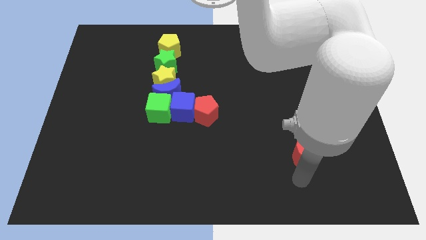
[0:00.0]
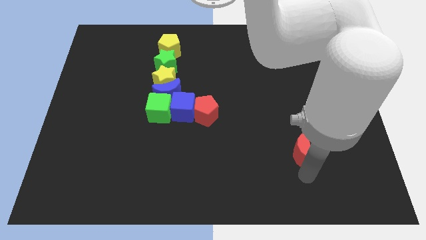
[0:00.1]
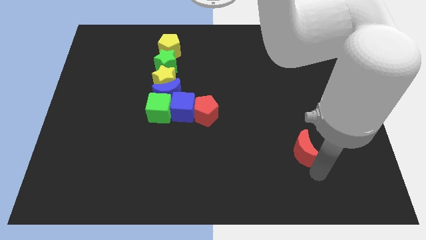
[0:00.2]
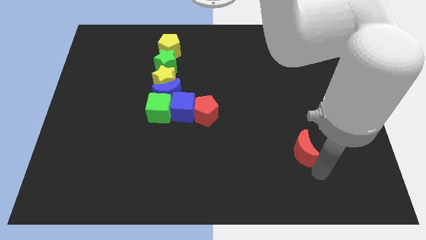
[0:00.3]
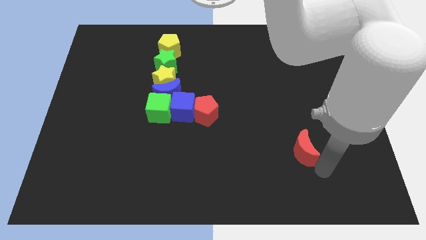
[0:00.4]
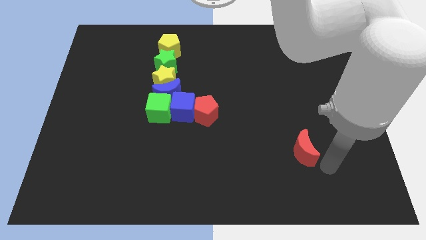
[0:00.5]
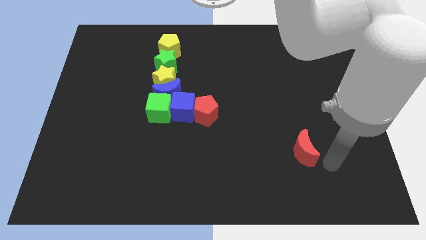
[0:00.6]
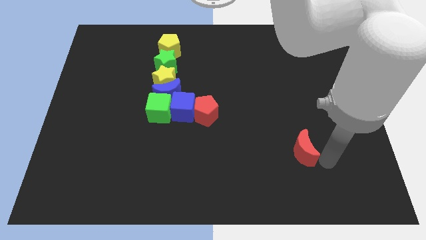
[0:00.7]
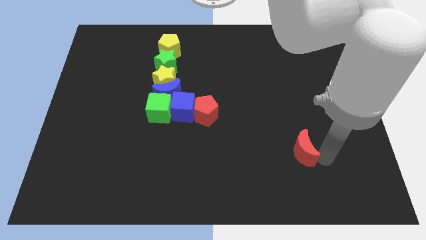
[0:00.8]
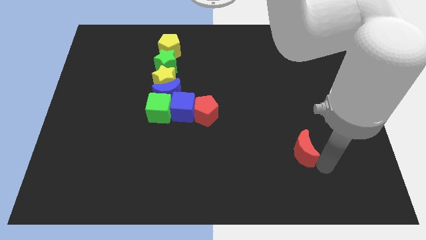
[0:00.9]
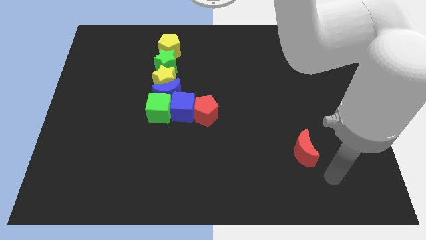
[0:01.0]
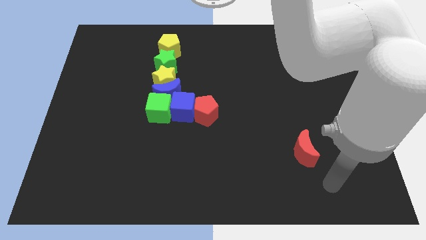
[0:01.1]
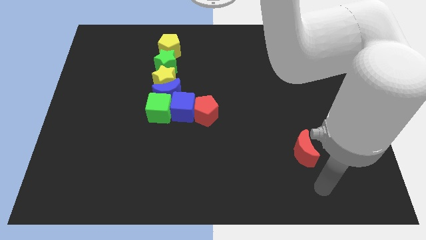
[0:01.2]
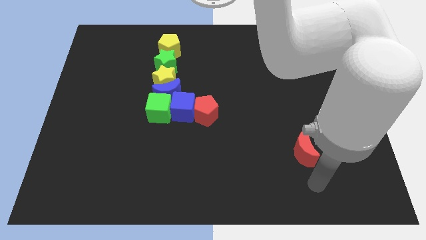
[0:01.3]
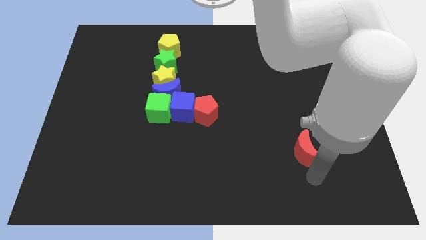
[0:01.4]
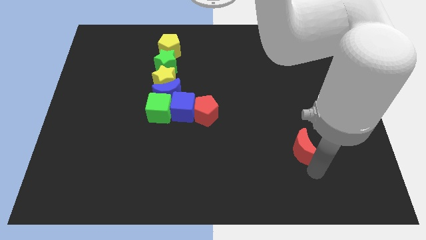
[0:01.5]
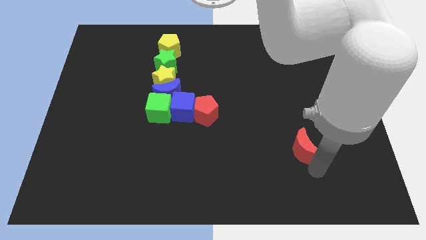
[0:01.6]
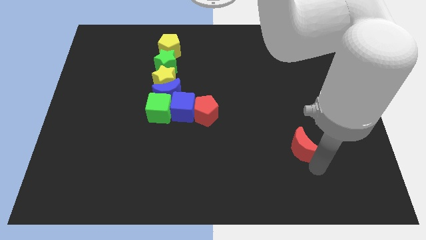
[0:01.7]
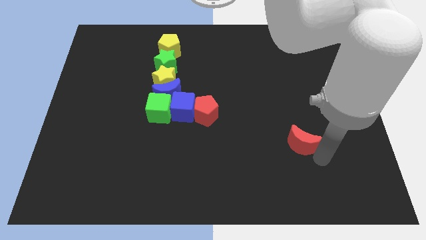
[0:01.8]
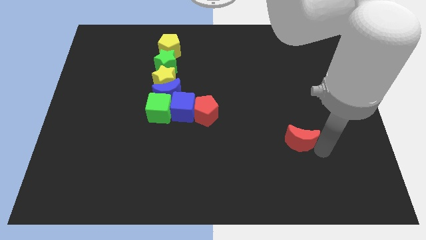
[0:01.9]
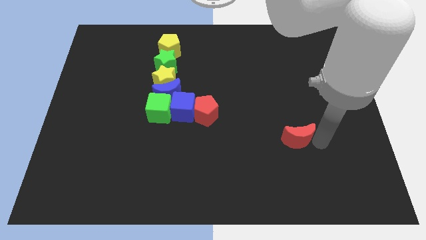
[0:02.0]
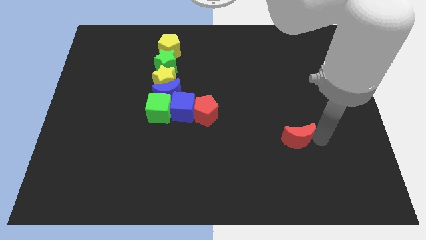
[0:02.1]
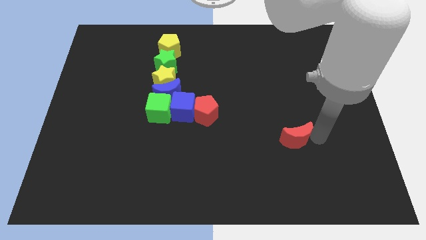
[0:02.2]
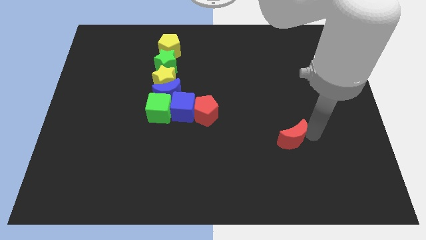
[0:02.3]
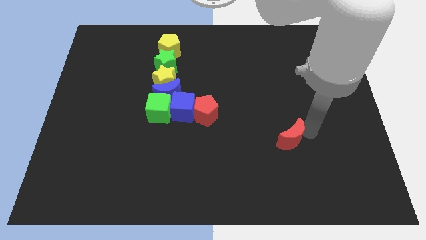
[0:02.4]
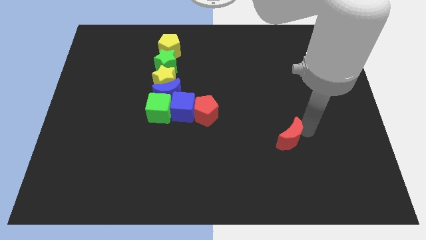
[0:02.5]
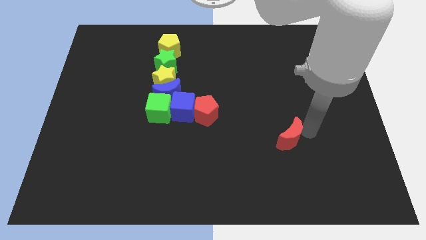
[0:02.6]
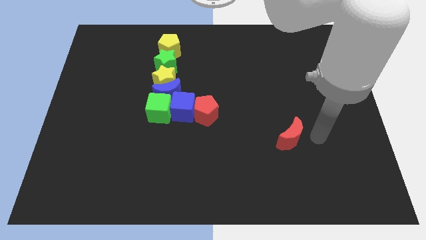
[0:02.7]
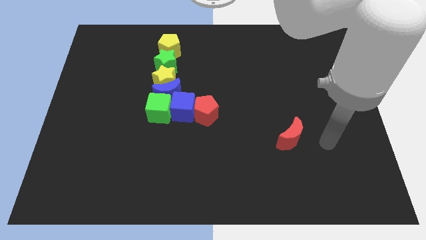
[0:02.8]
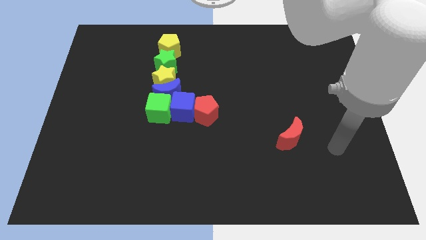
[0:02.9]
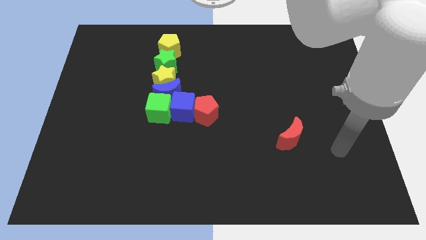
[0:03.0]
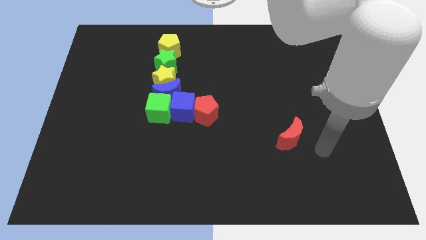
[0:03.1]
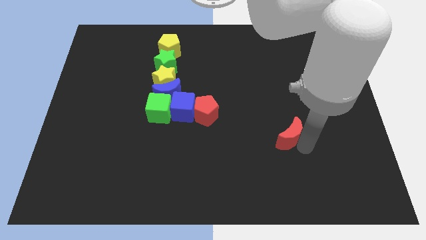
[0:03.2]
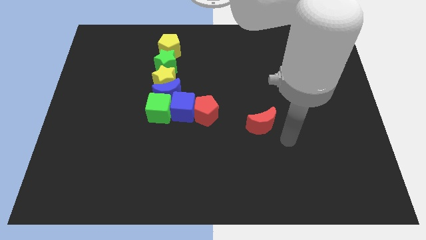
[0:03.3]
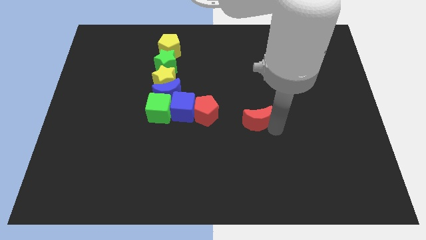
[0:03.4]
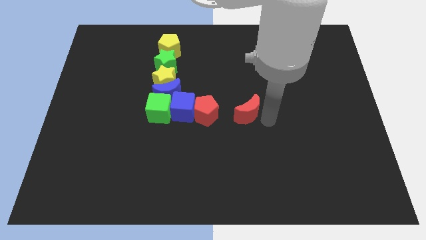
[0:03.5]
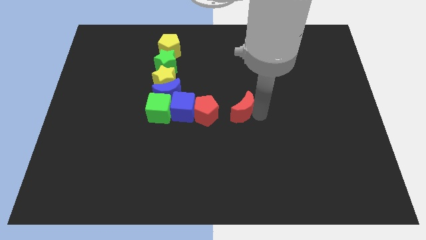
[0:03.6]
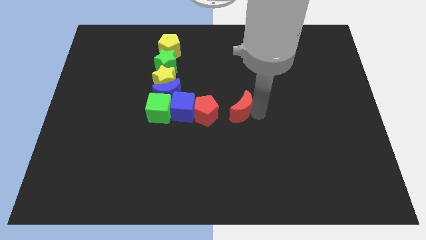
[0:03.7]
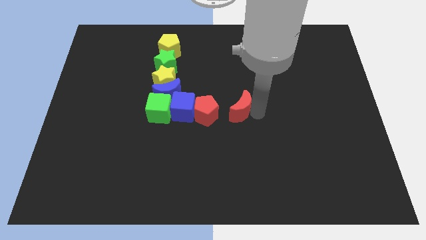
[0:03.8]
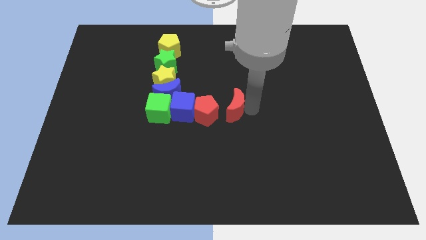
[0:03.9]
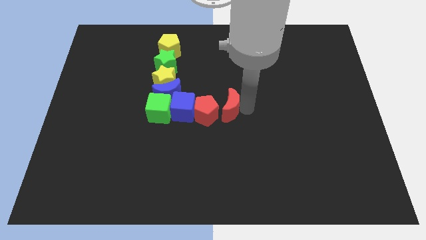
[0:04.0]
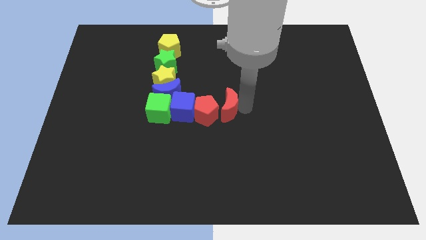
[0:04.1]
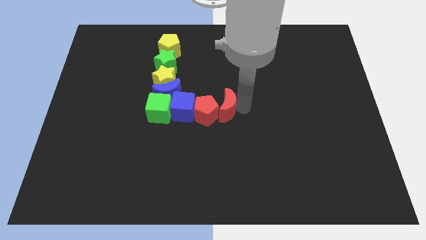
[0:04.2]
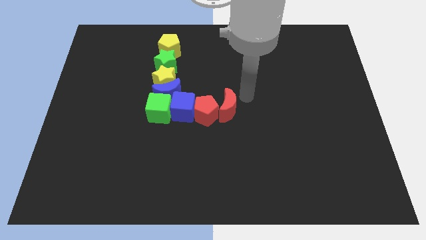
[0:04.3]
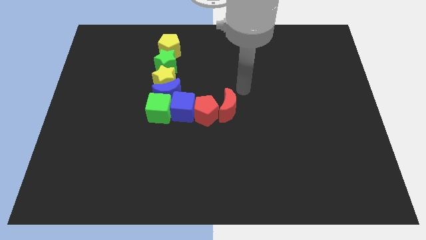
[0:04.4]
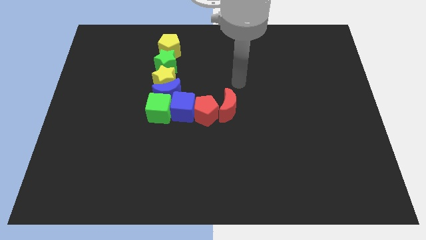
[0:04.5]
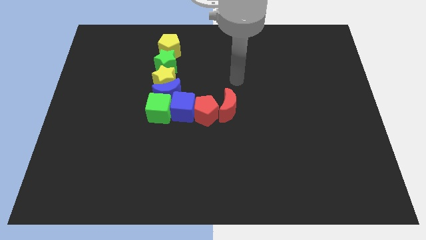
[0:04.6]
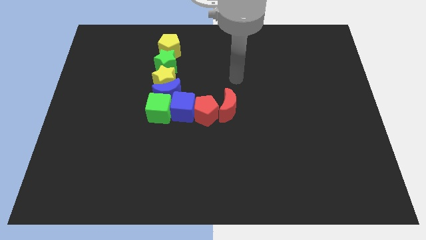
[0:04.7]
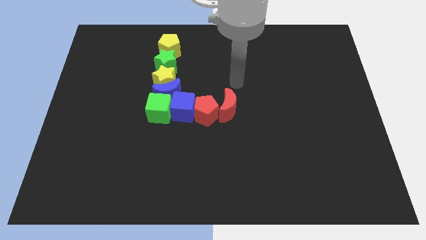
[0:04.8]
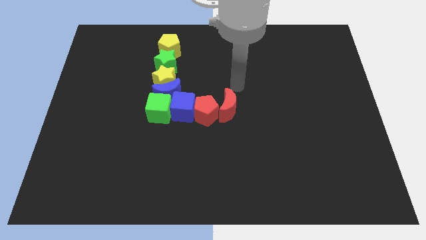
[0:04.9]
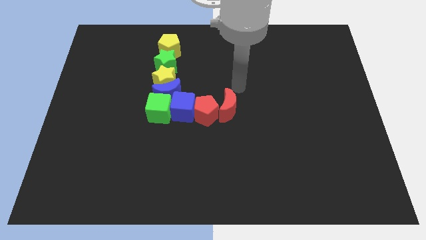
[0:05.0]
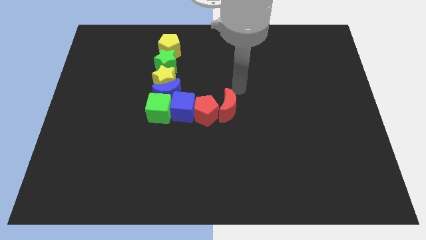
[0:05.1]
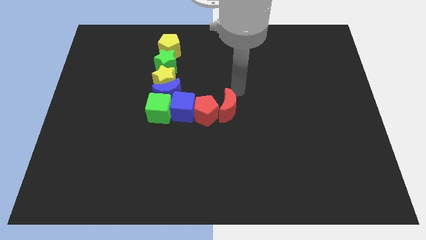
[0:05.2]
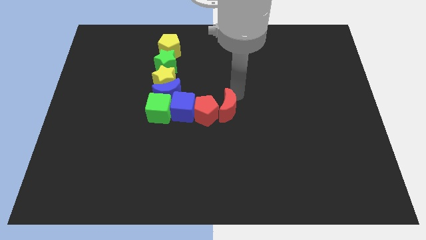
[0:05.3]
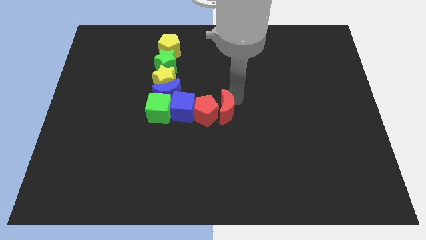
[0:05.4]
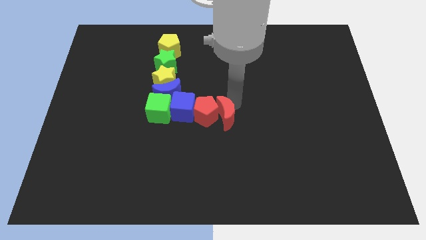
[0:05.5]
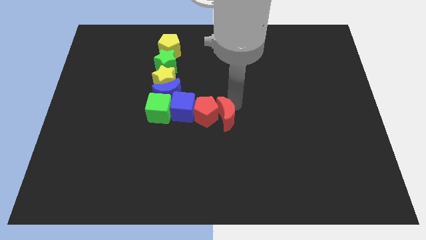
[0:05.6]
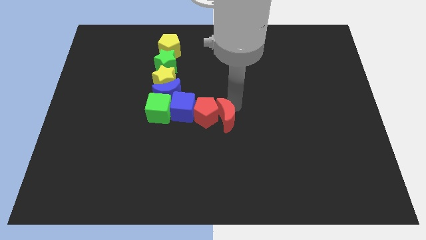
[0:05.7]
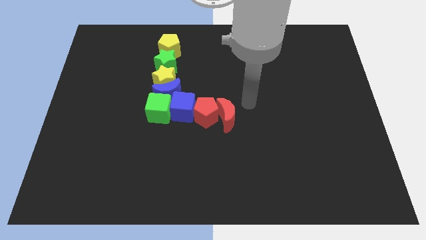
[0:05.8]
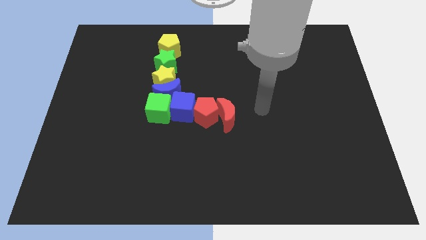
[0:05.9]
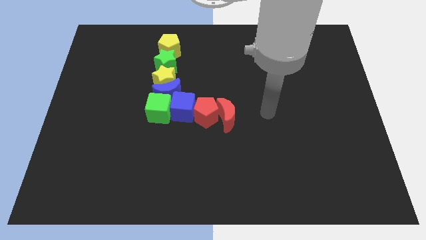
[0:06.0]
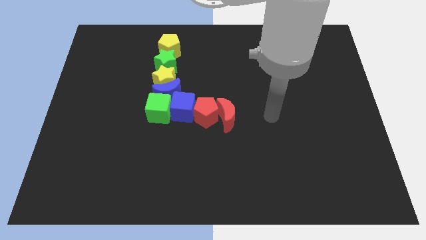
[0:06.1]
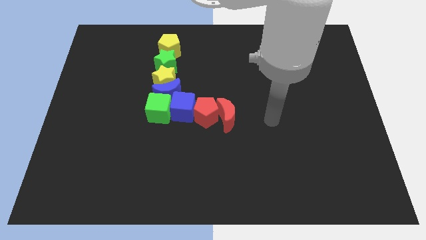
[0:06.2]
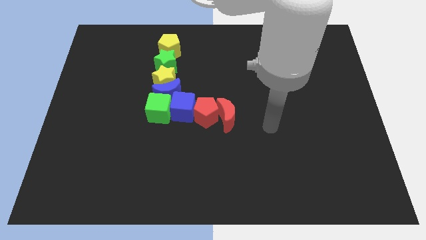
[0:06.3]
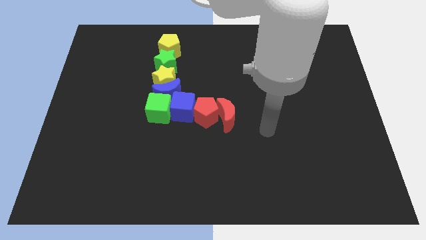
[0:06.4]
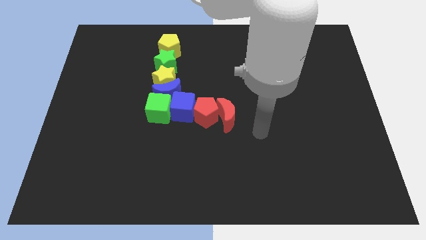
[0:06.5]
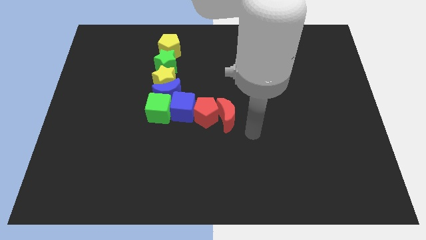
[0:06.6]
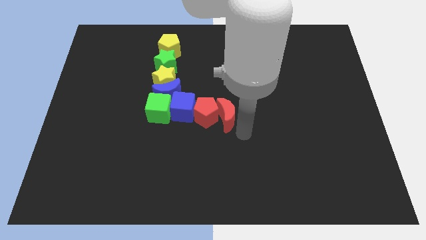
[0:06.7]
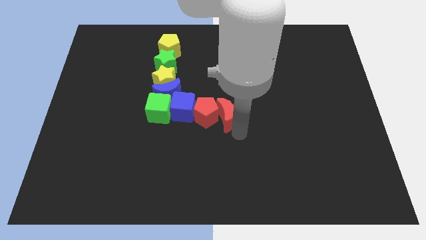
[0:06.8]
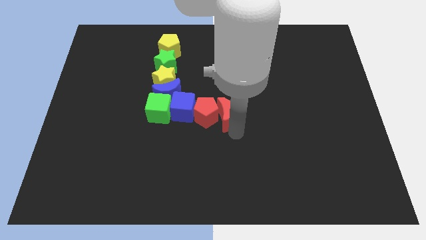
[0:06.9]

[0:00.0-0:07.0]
push the red moon to the bottom center of the board

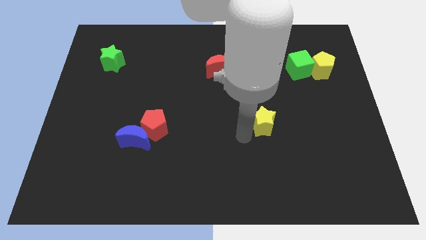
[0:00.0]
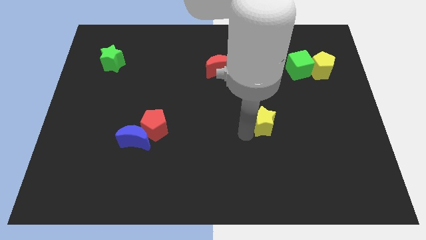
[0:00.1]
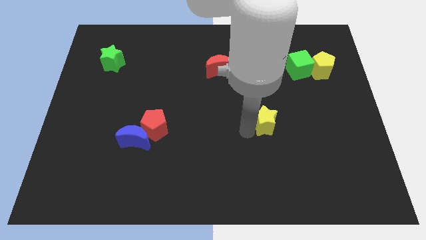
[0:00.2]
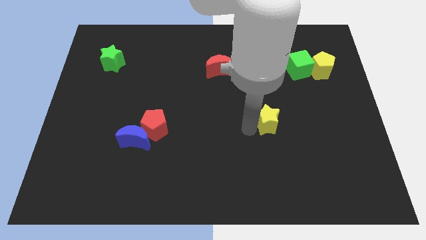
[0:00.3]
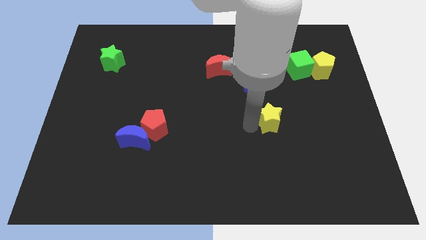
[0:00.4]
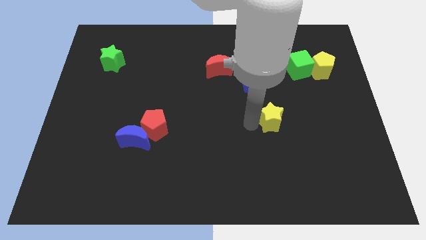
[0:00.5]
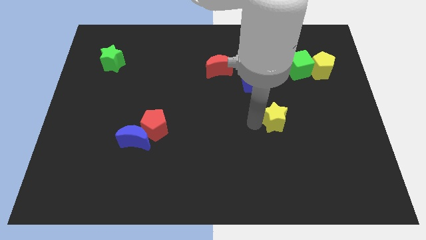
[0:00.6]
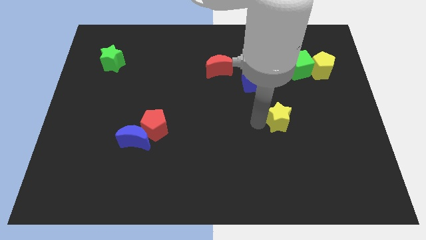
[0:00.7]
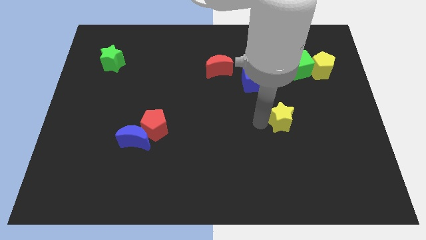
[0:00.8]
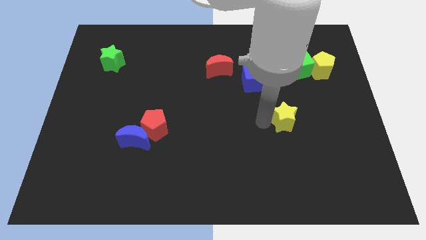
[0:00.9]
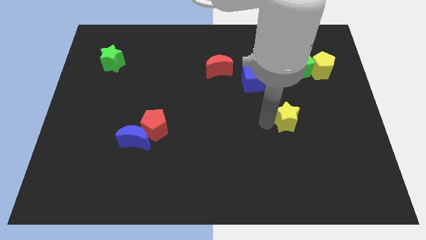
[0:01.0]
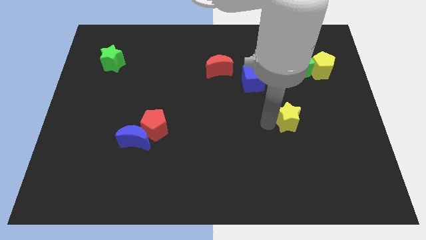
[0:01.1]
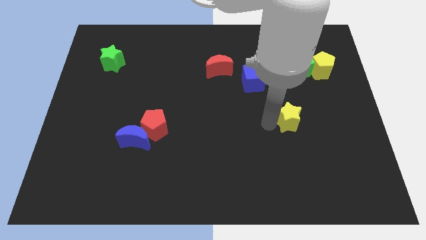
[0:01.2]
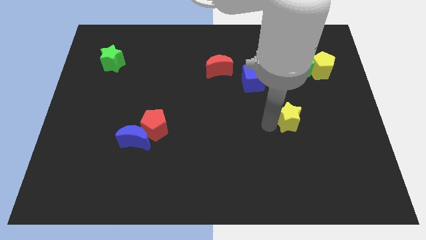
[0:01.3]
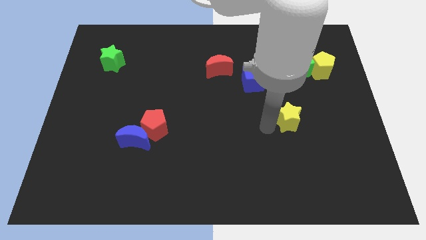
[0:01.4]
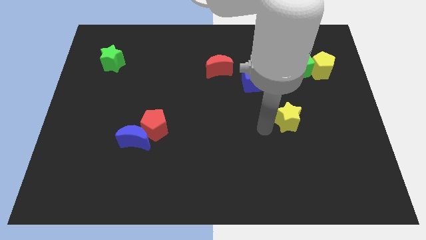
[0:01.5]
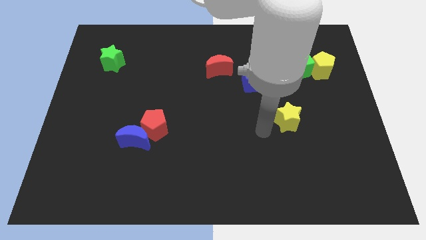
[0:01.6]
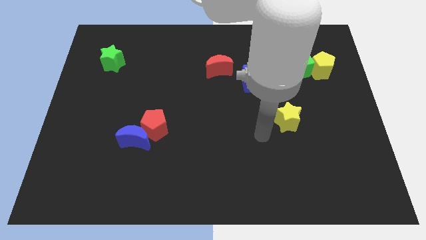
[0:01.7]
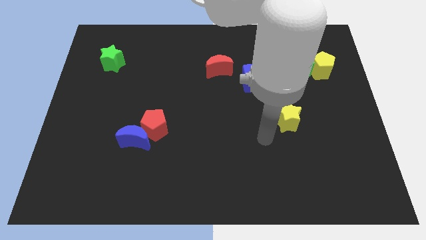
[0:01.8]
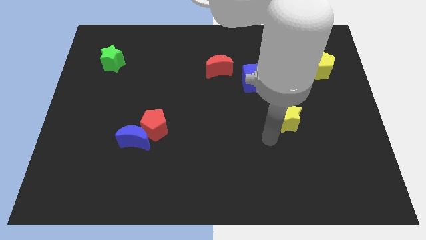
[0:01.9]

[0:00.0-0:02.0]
move the yellow star diagonally bottom right to the blue cube
